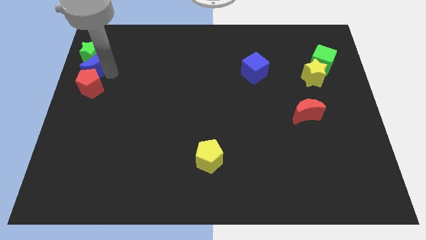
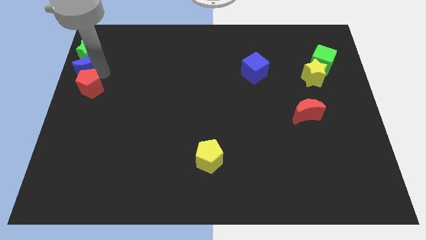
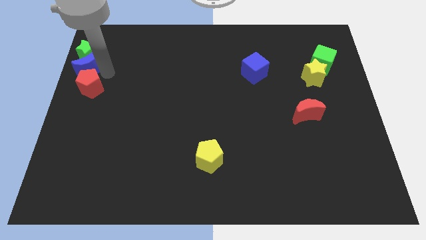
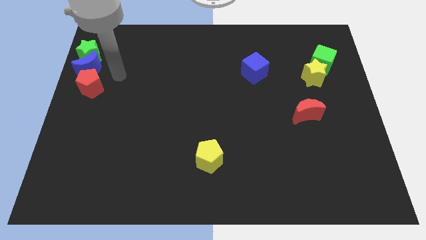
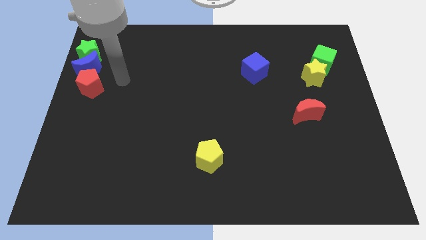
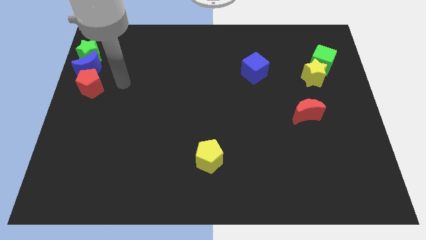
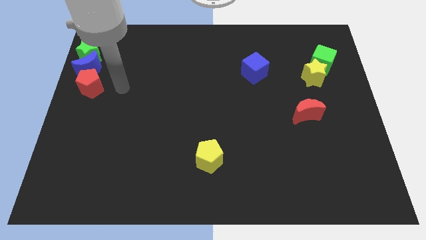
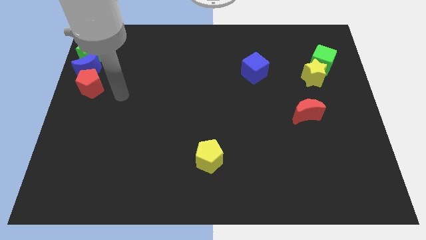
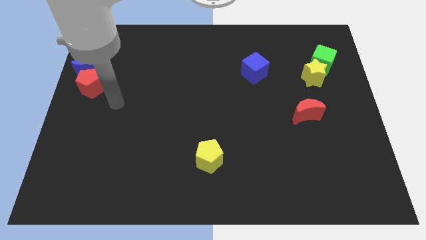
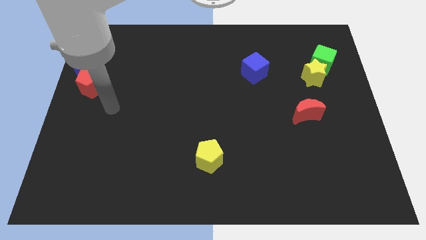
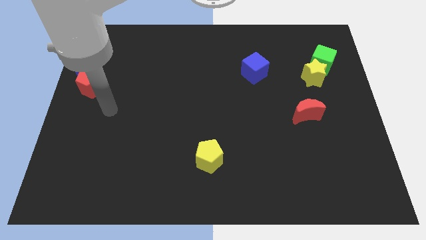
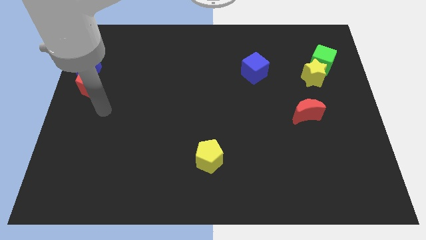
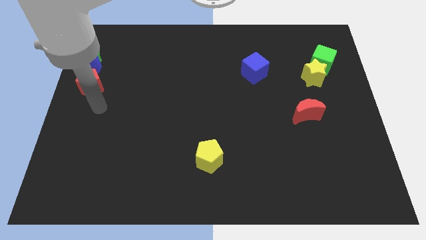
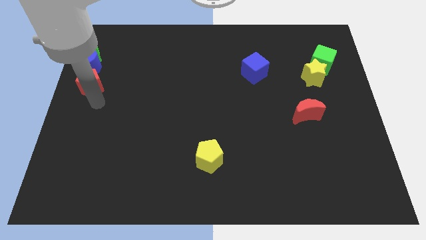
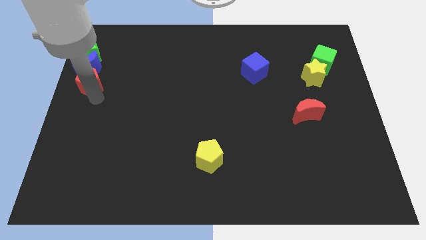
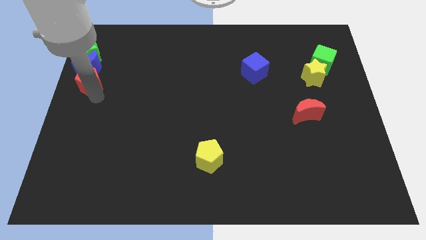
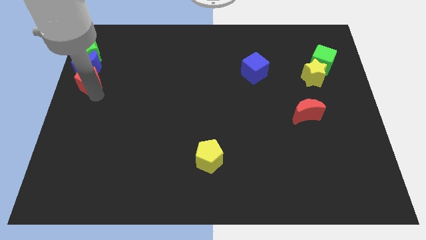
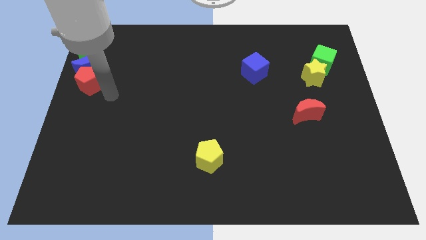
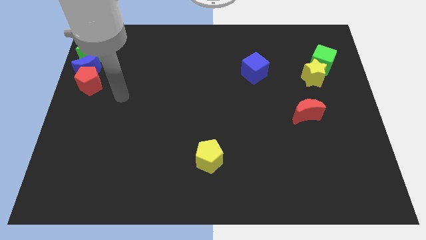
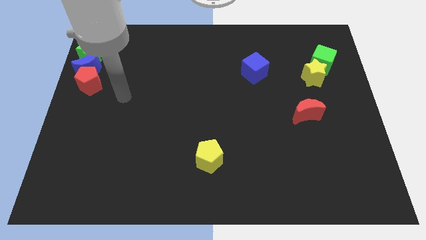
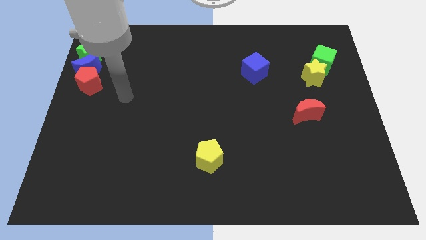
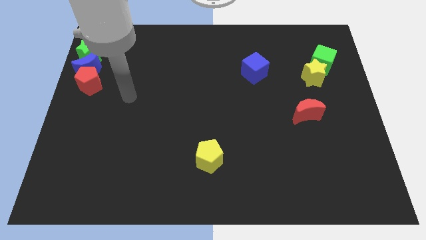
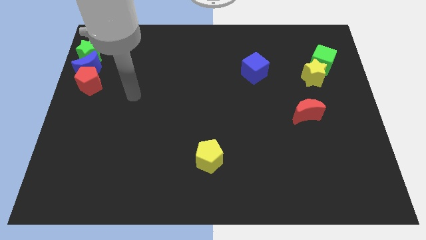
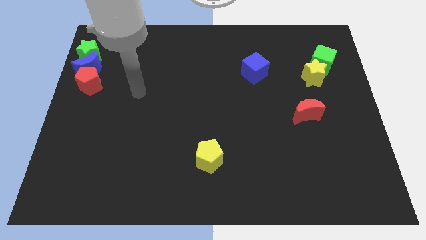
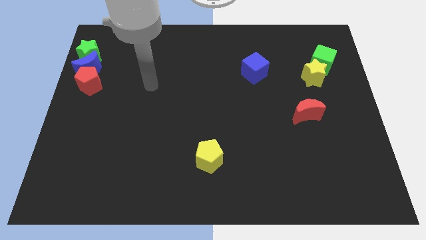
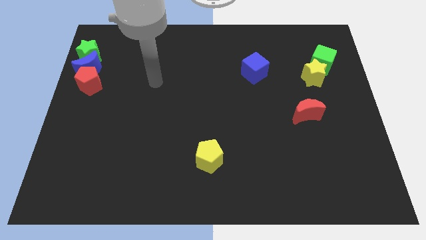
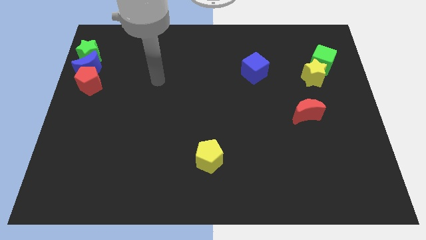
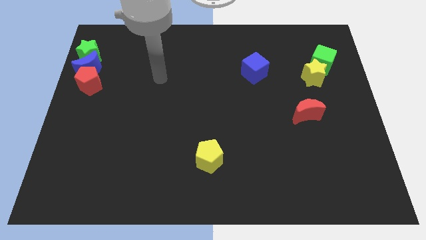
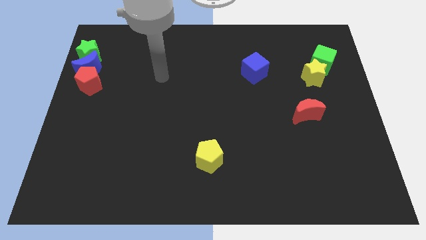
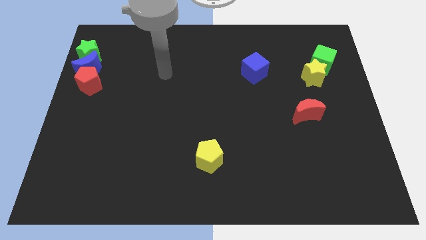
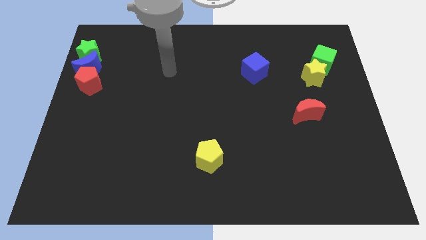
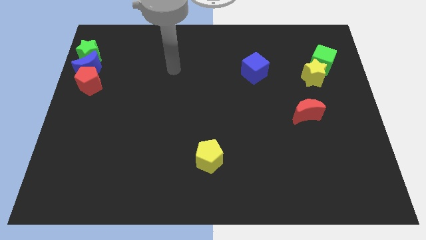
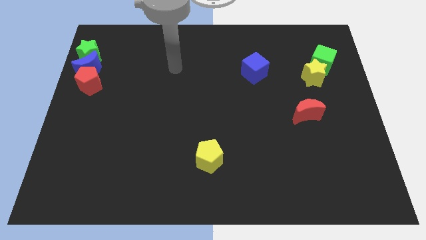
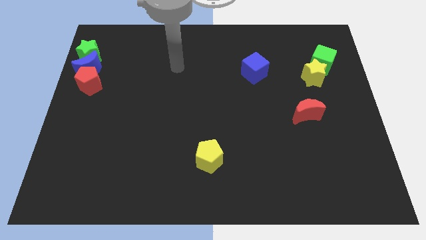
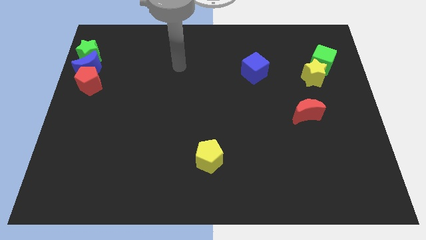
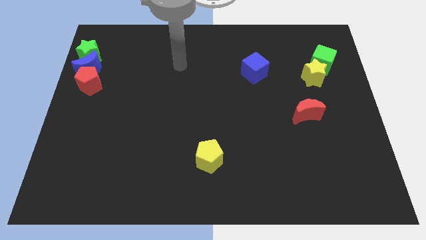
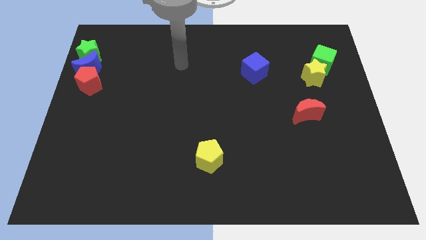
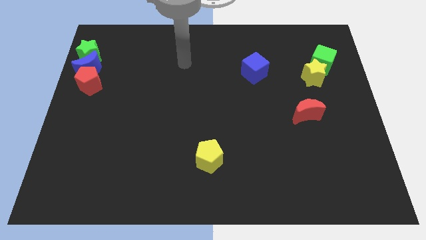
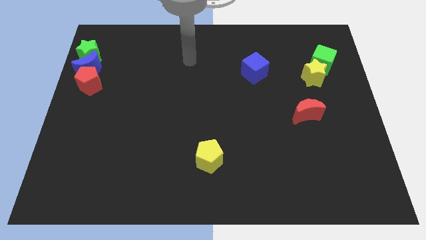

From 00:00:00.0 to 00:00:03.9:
adjust the blue crescent and red pentagon to the bottom of the green star

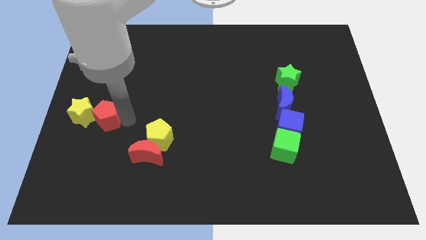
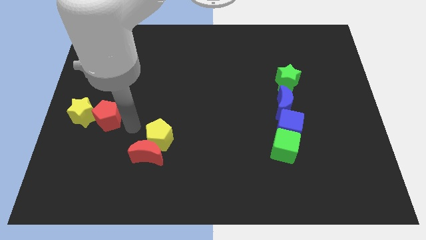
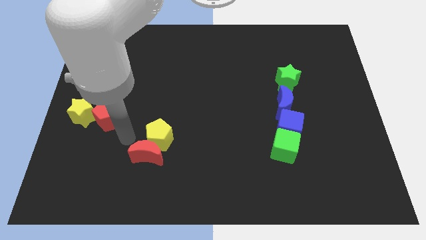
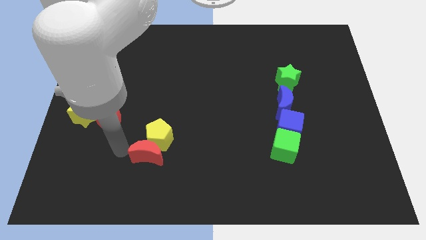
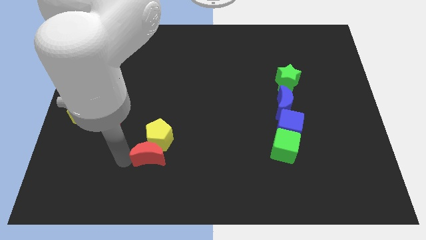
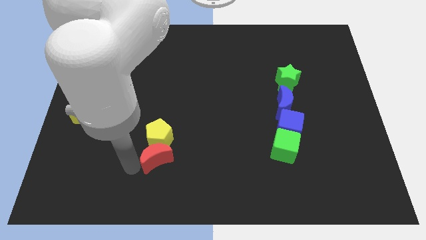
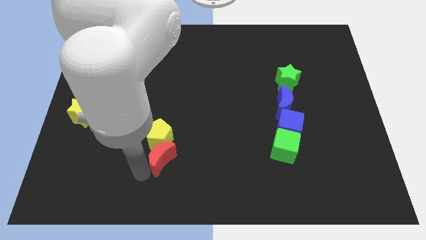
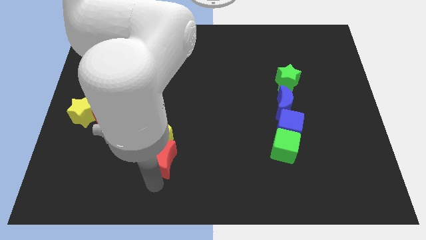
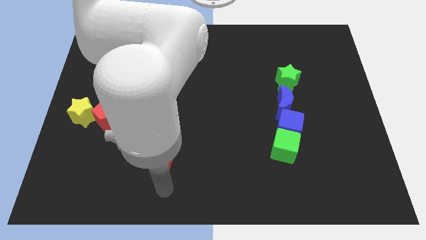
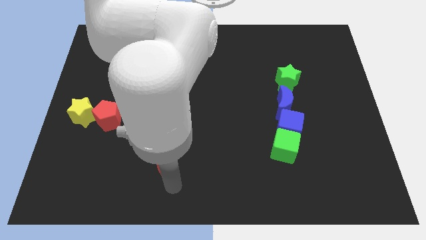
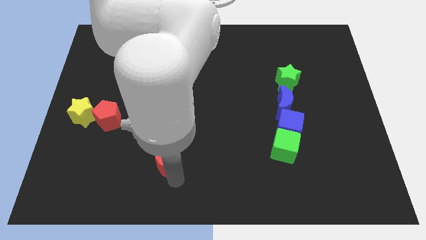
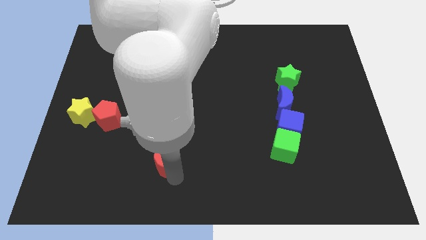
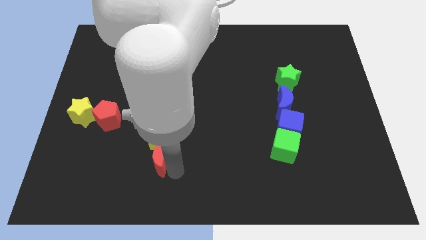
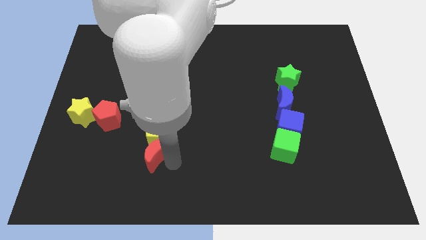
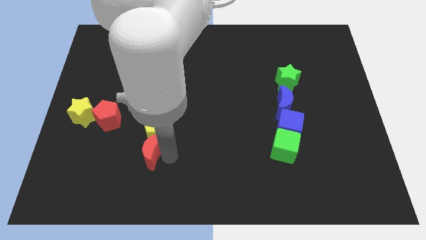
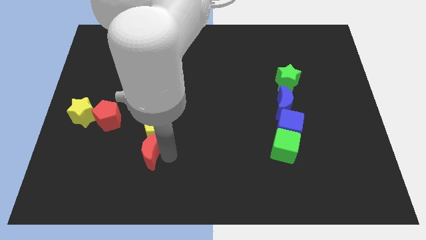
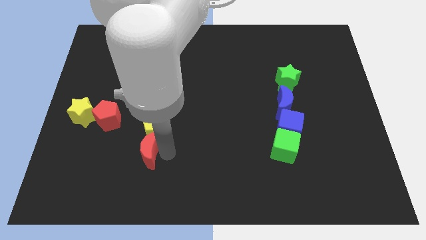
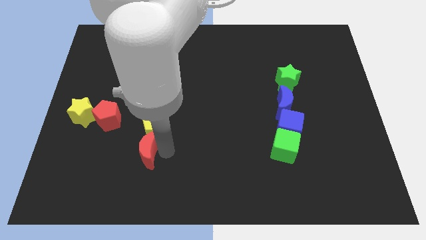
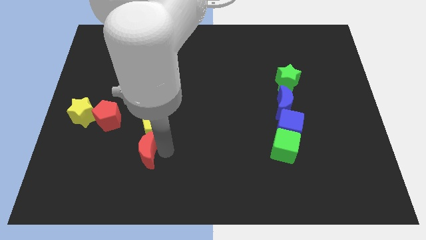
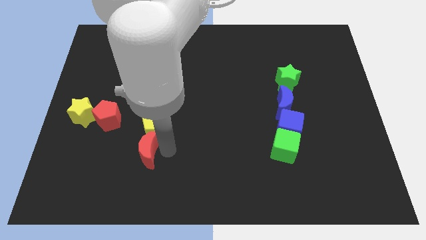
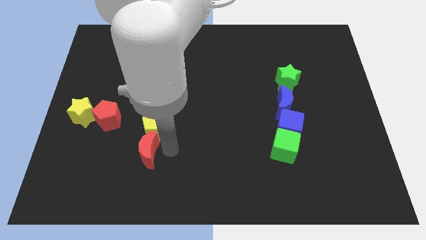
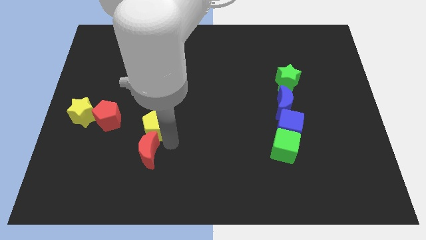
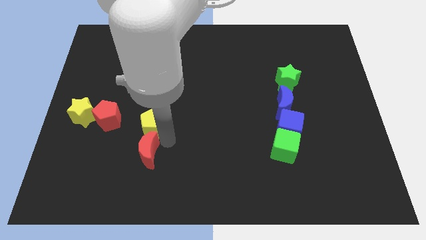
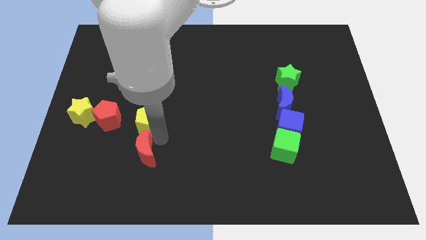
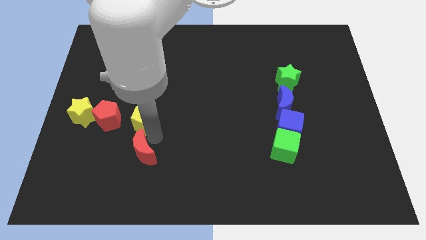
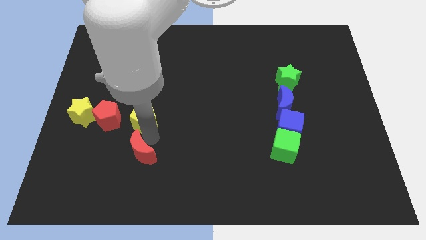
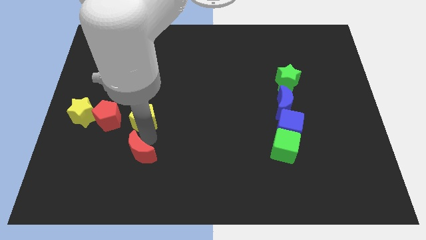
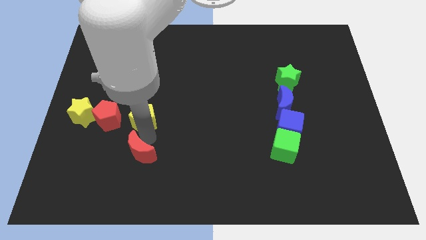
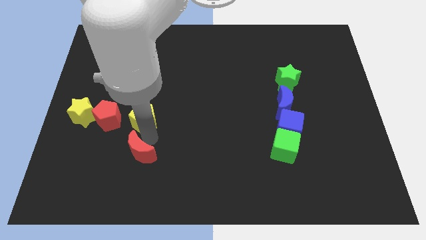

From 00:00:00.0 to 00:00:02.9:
push the red crescent along with yellow pentagon to the right of red pentagon

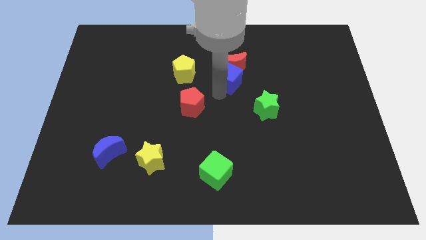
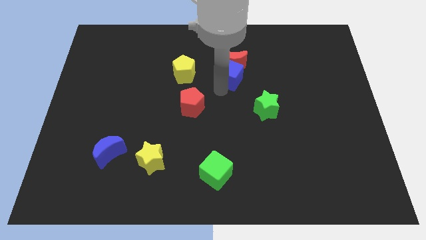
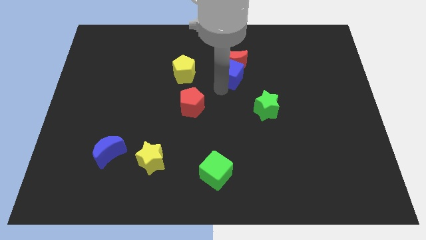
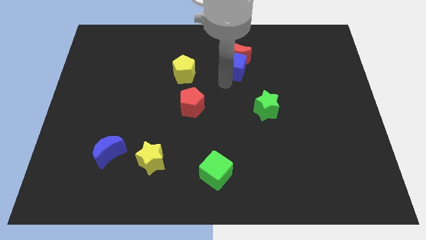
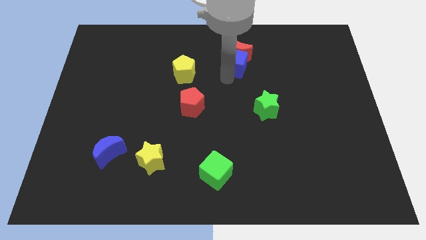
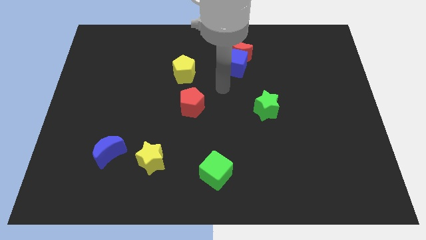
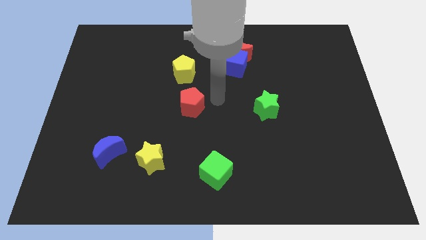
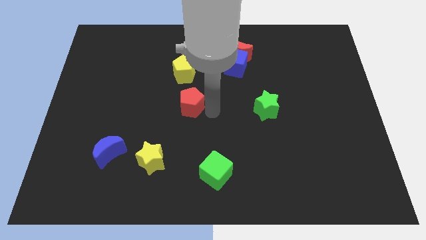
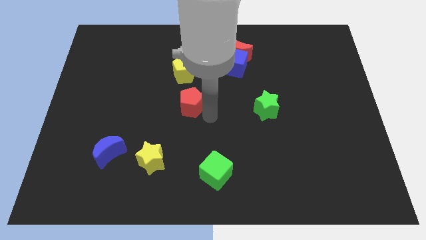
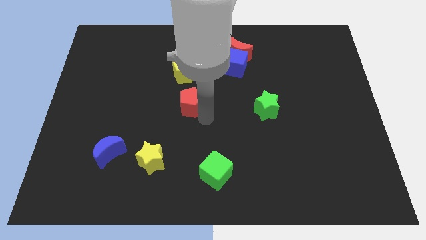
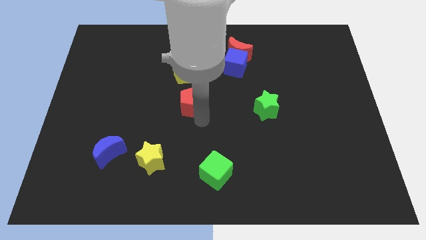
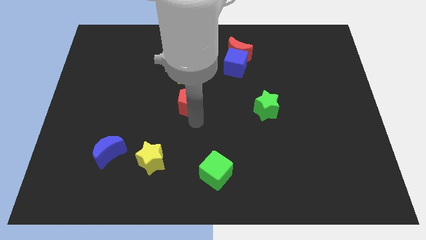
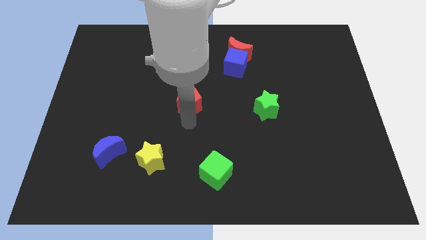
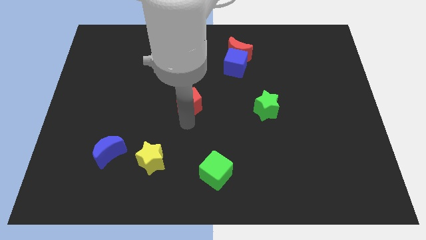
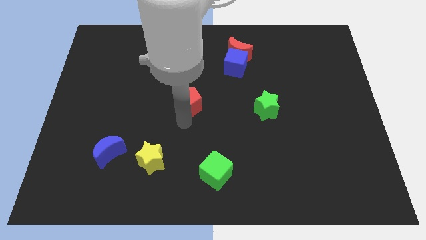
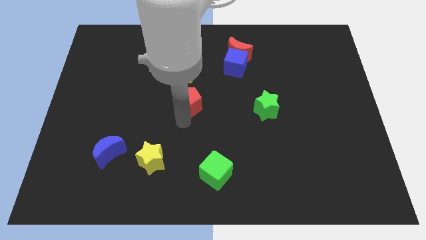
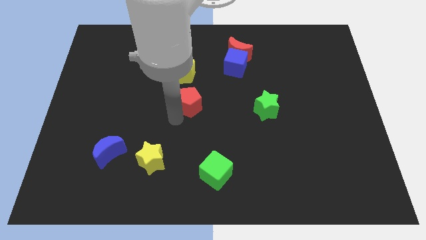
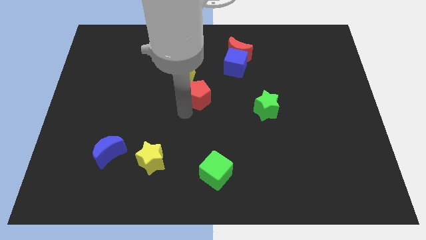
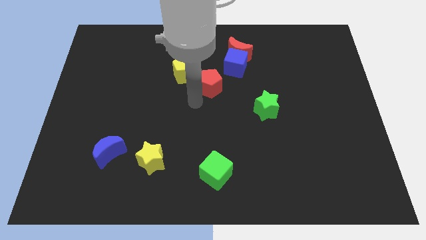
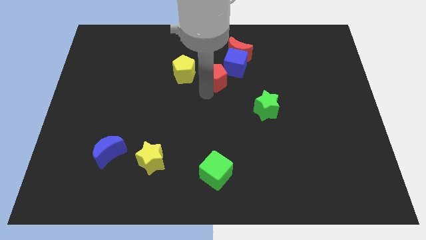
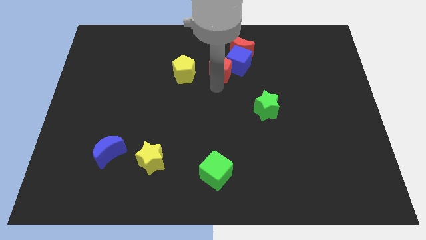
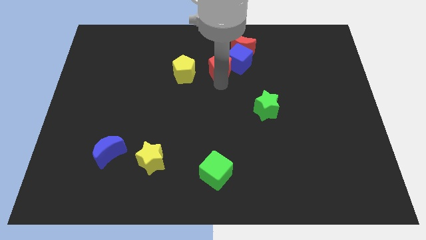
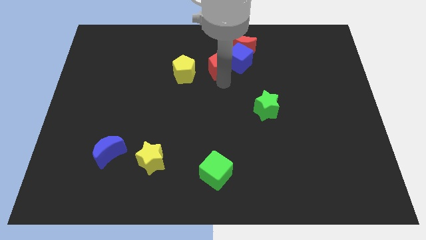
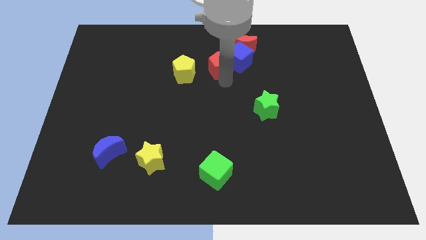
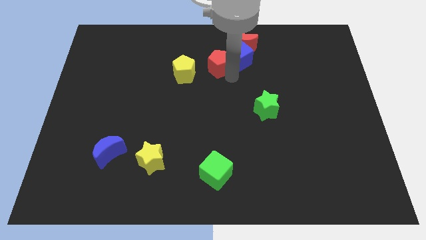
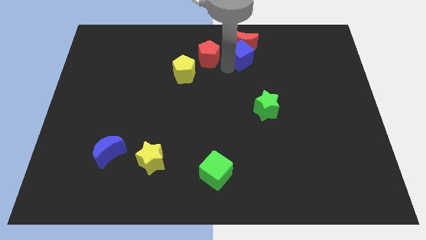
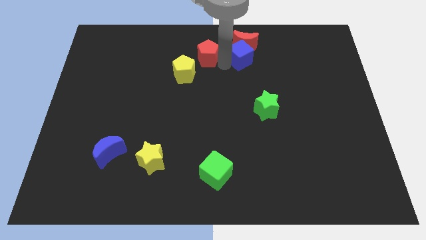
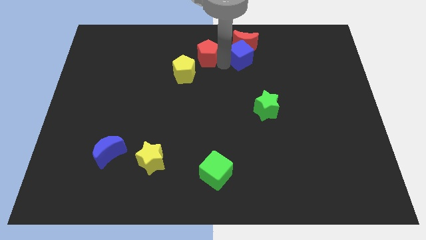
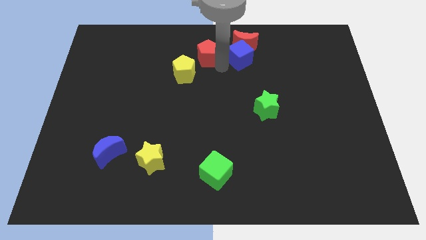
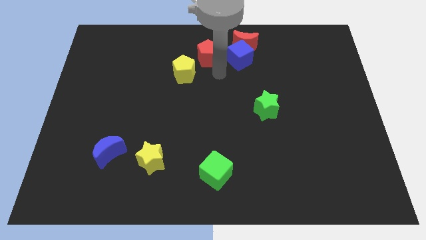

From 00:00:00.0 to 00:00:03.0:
place the red pentagon to the left of the blue cube
